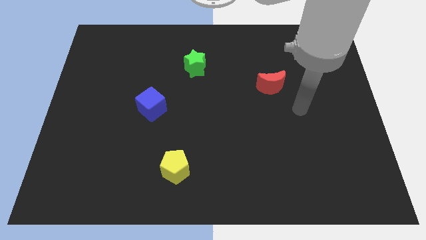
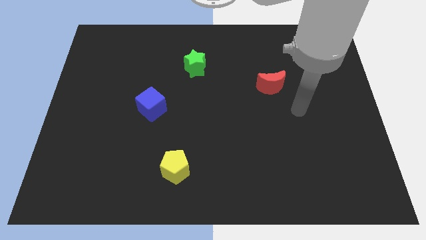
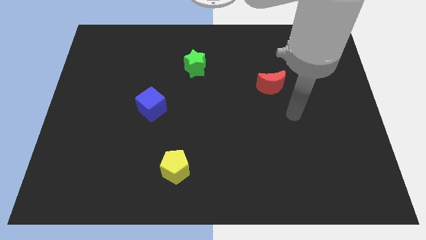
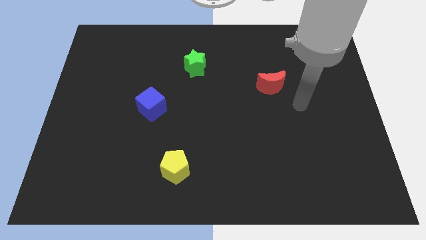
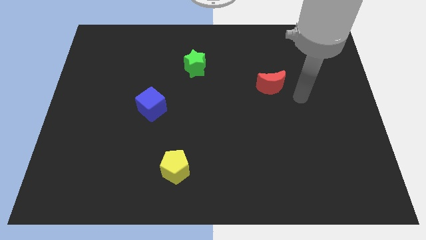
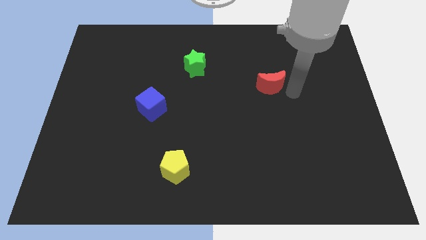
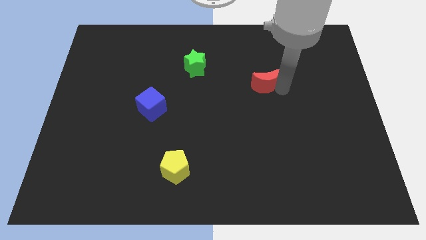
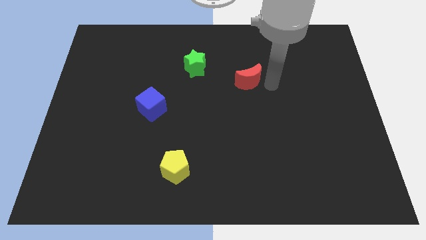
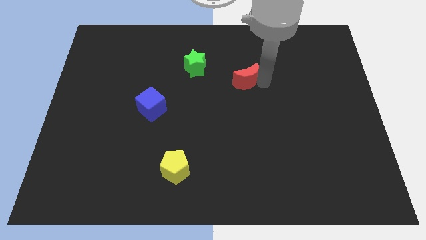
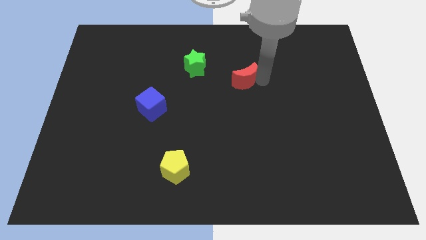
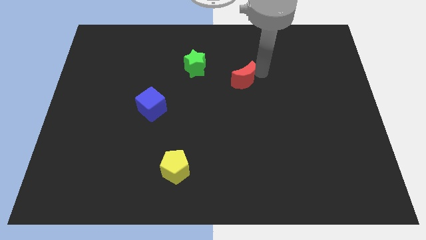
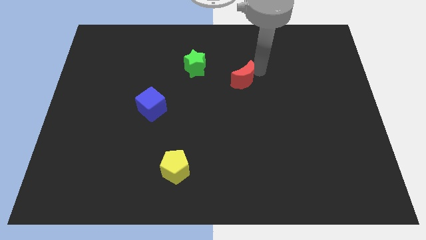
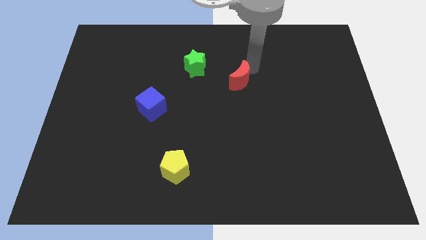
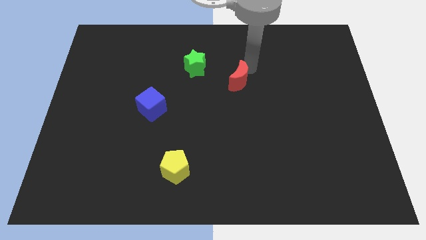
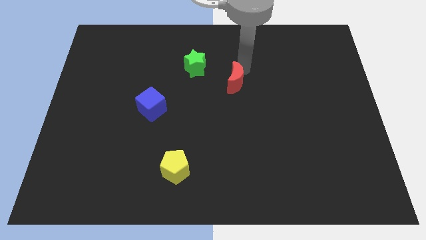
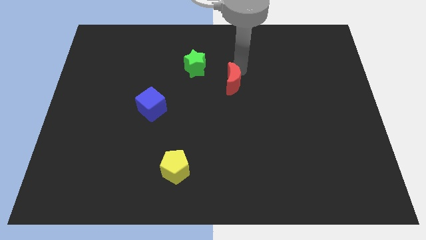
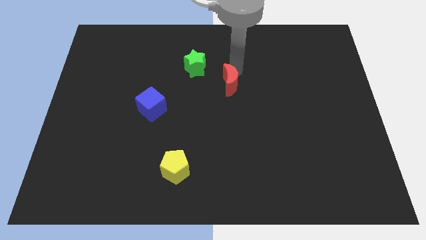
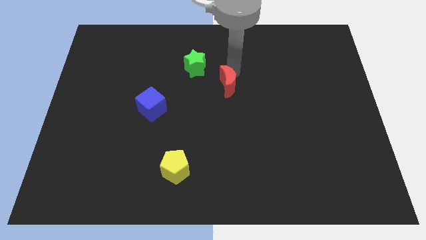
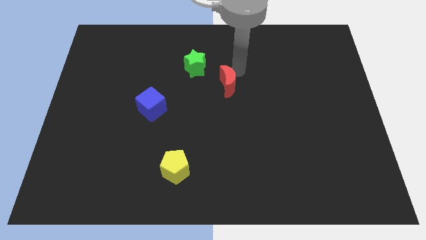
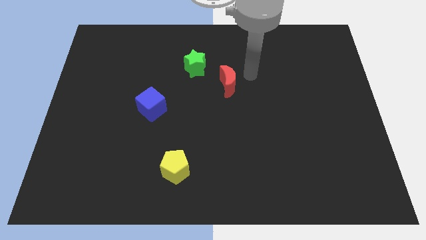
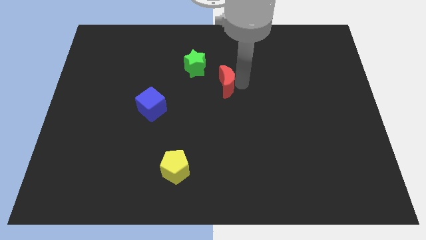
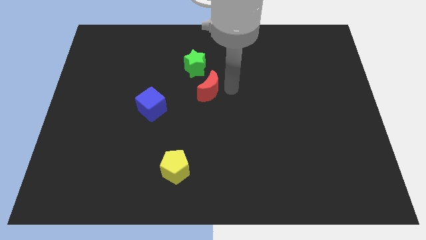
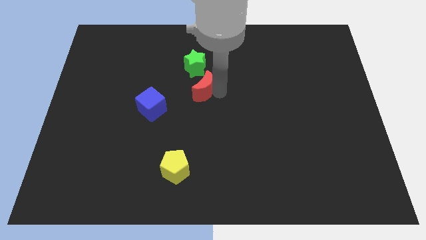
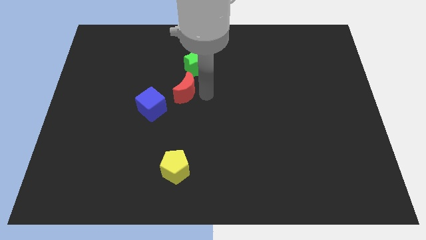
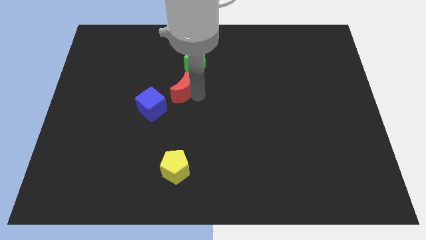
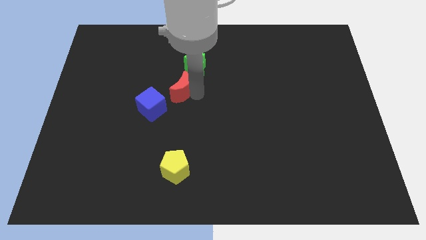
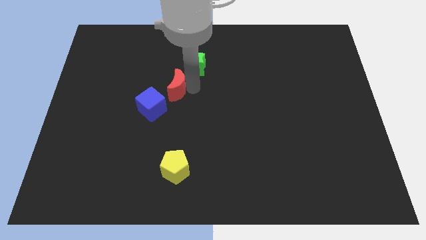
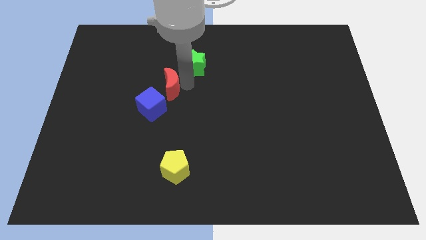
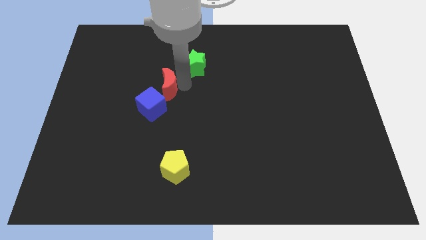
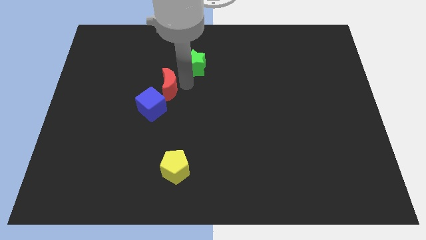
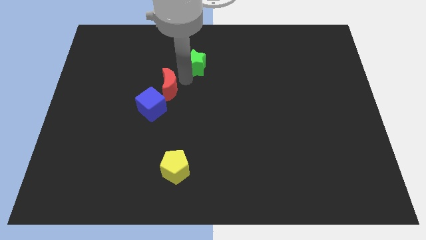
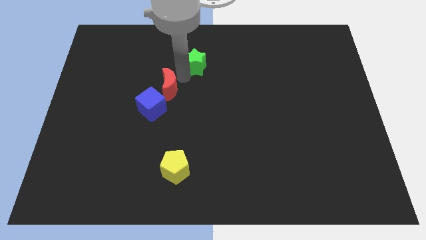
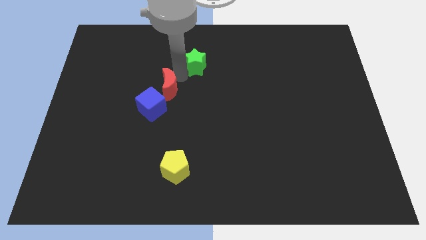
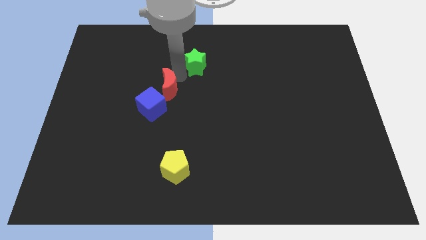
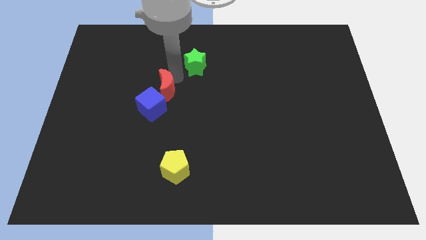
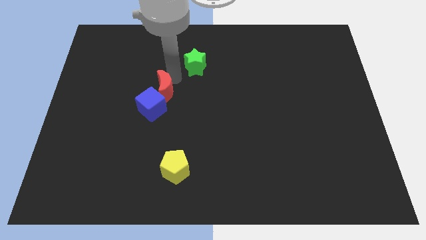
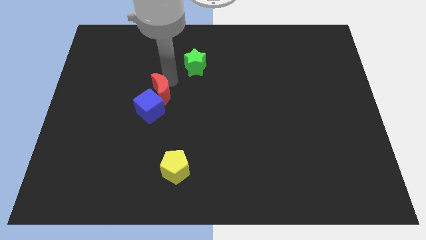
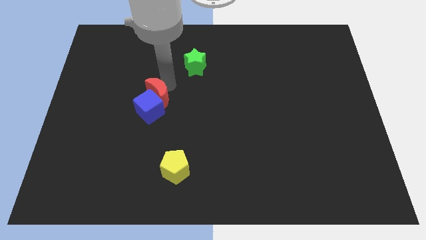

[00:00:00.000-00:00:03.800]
slide the red moon towards the cube

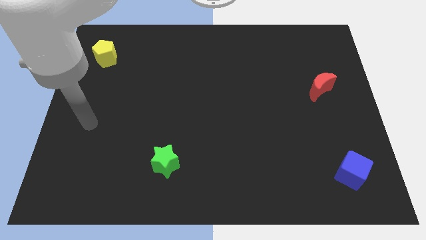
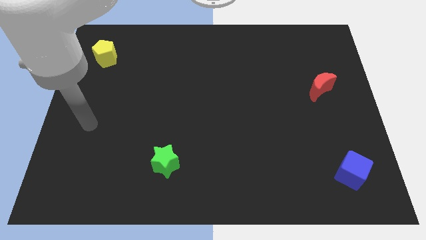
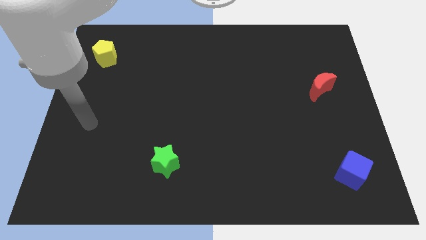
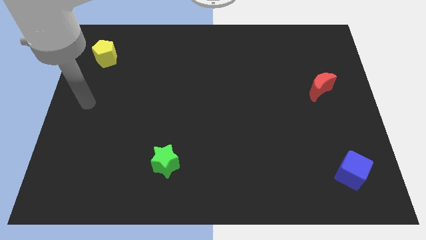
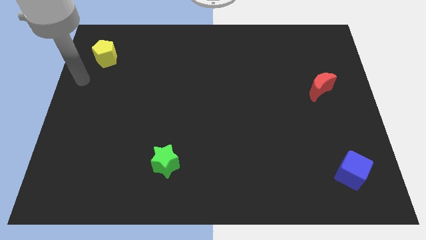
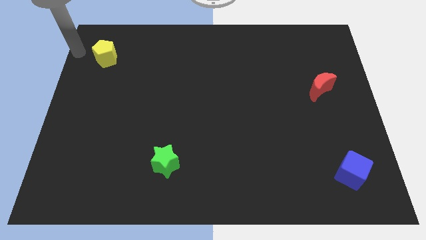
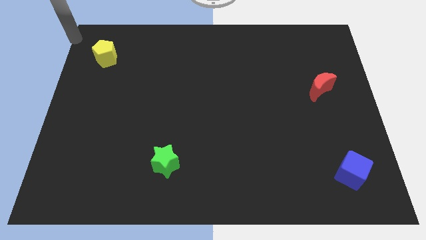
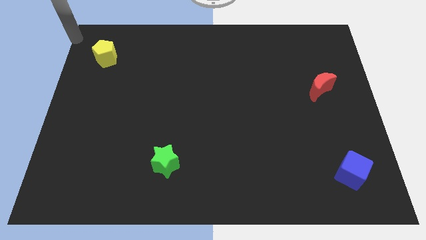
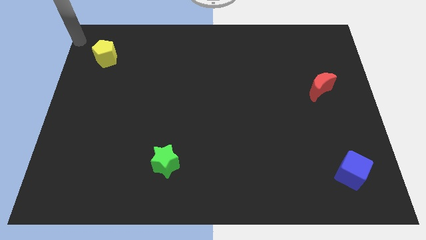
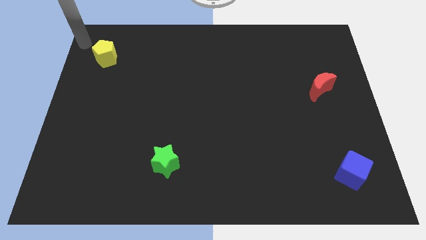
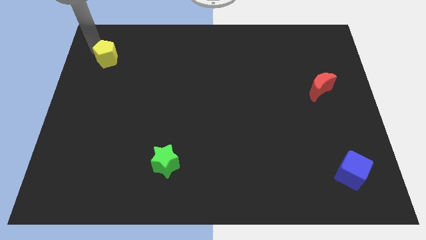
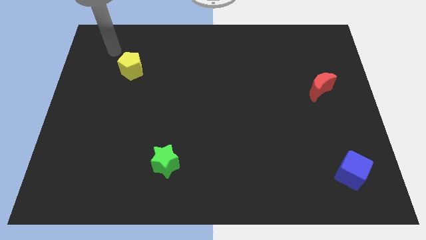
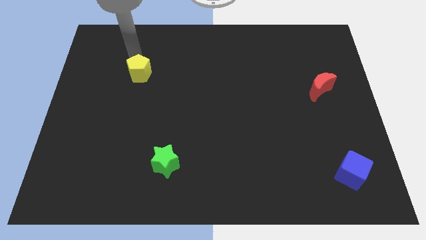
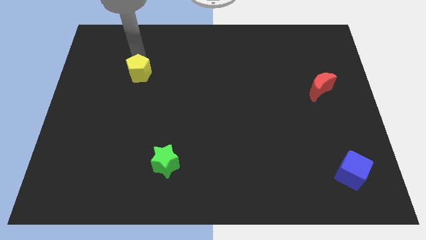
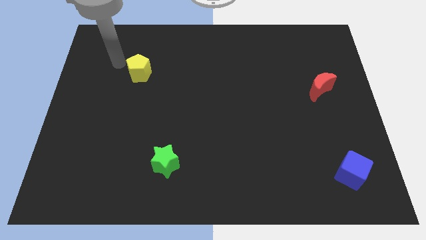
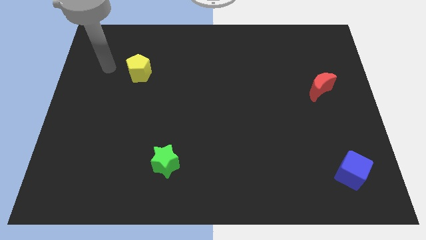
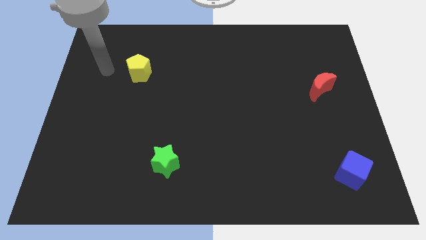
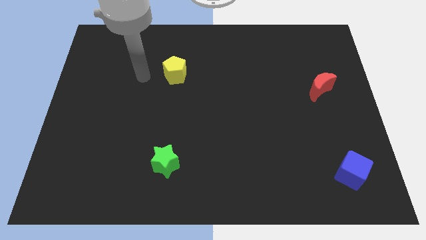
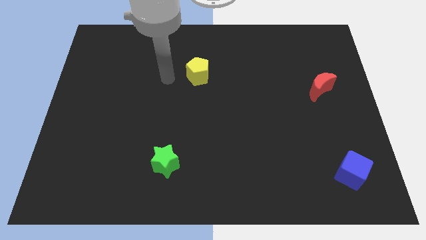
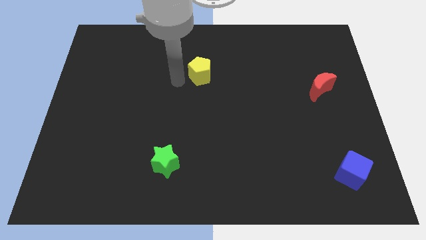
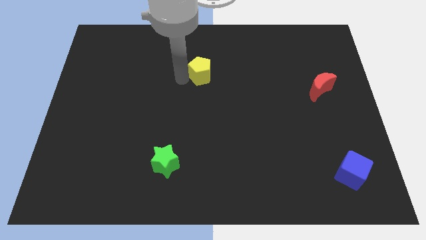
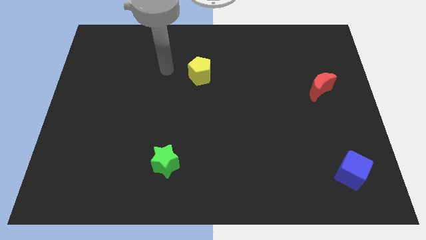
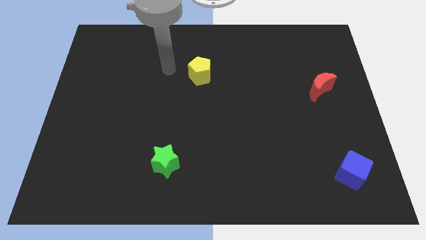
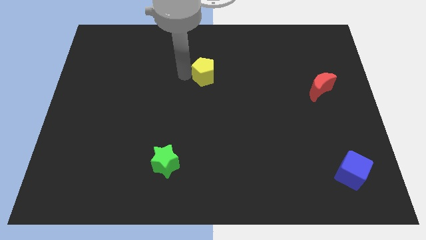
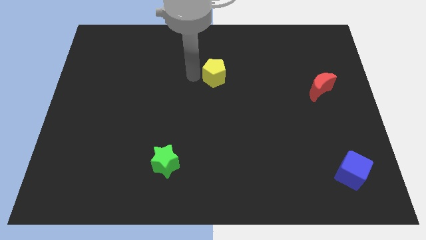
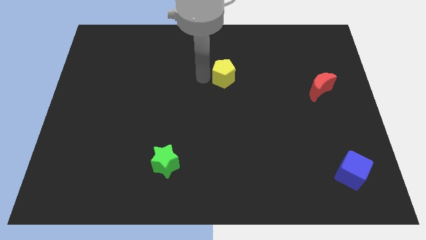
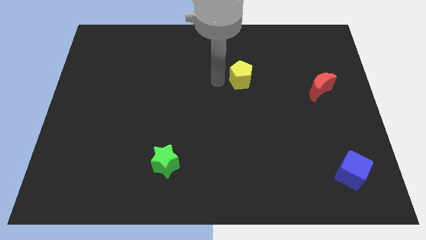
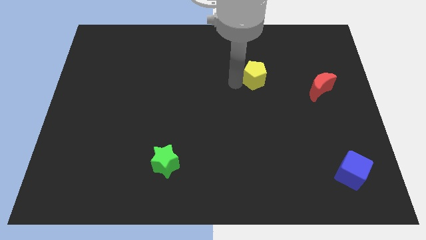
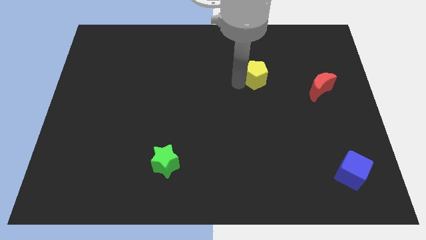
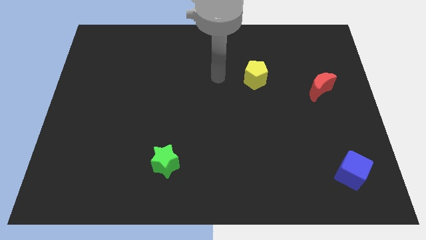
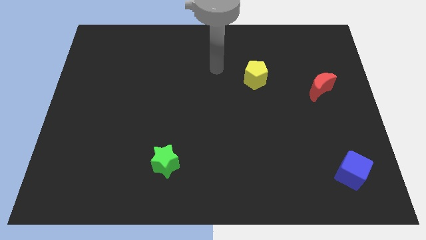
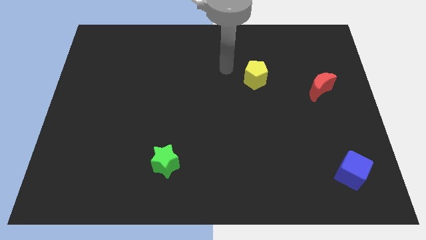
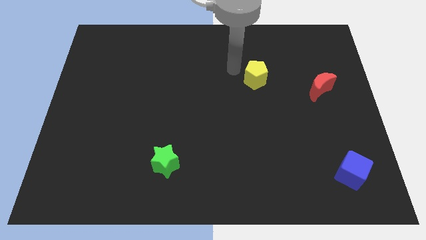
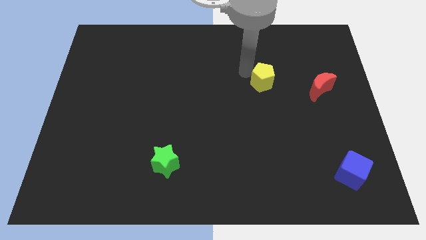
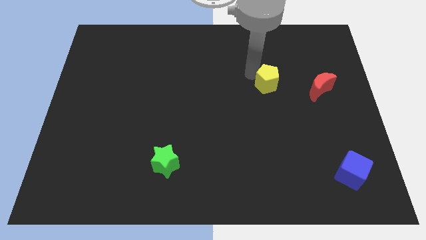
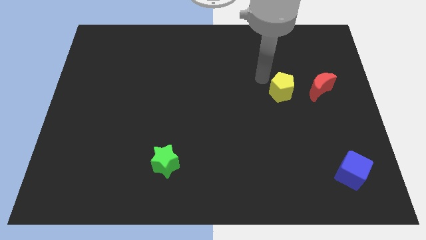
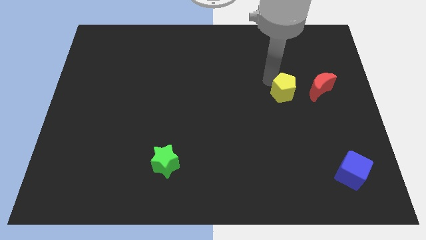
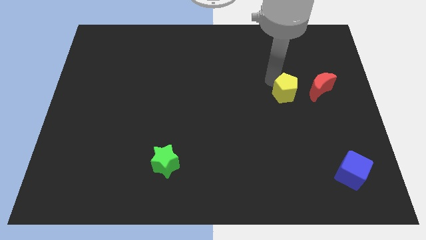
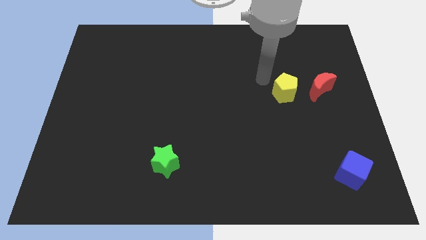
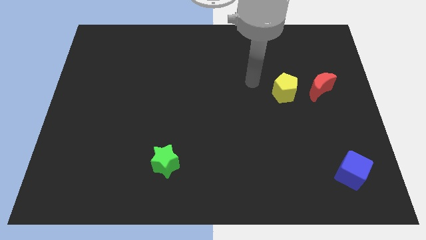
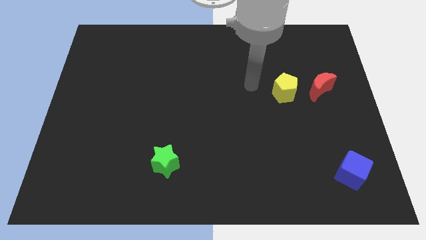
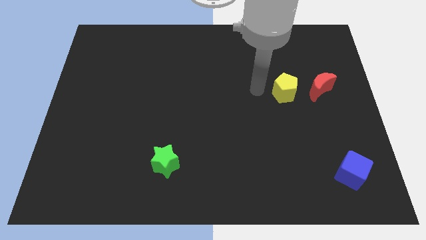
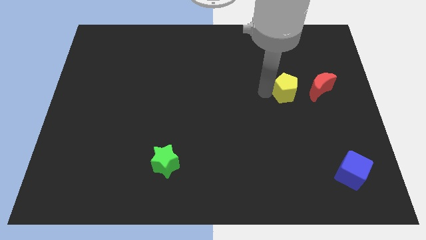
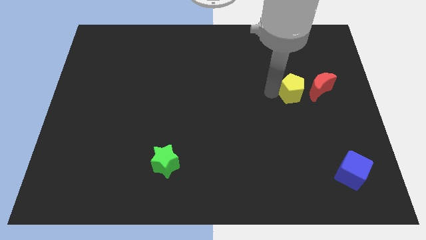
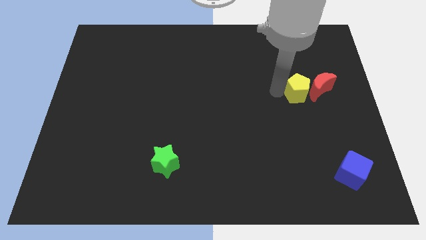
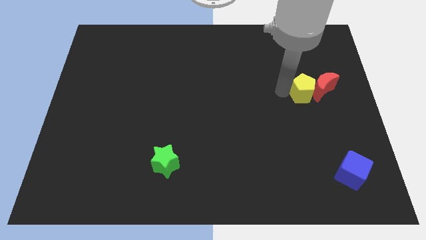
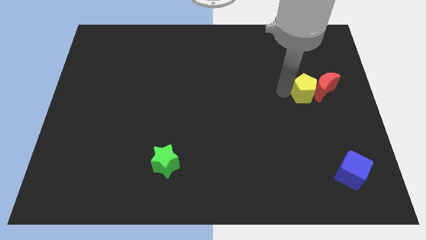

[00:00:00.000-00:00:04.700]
move the pentagon to the red moon

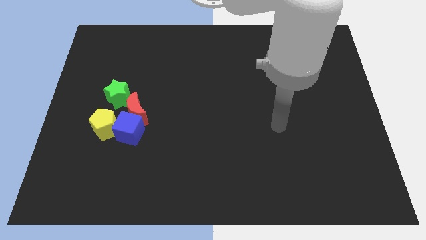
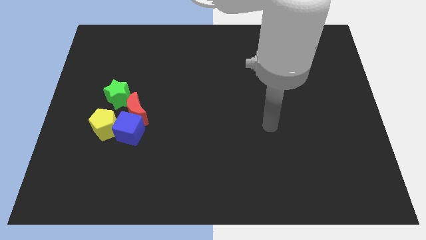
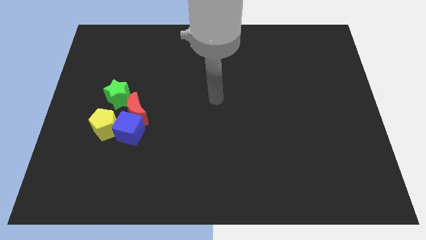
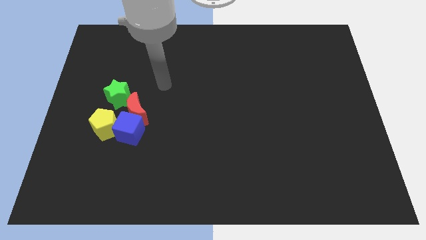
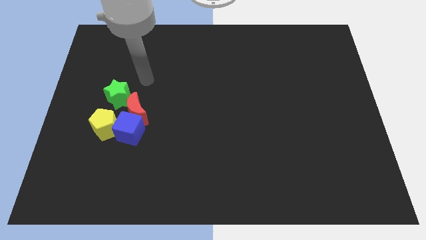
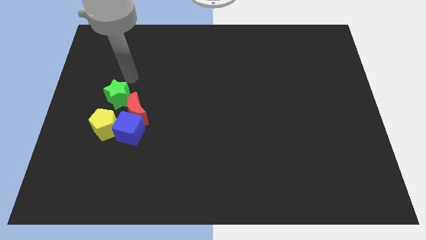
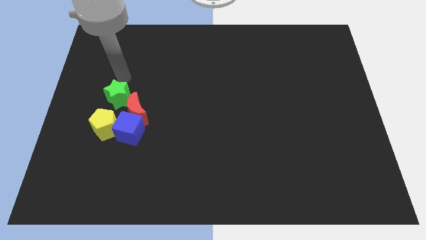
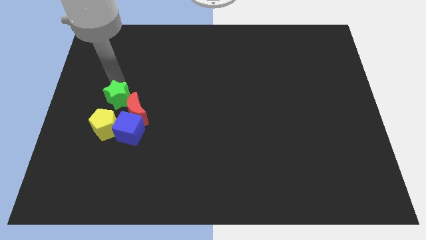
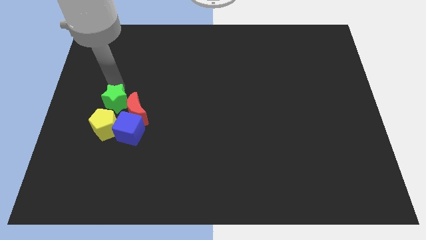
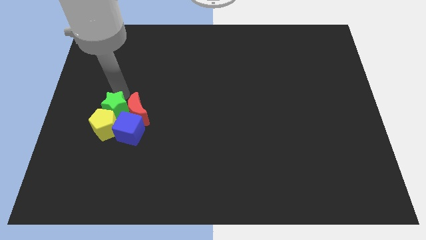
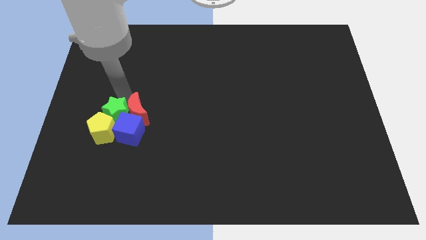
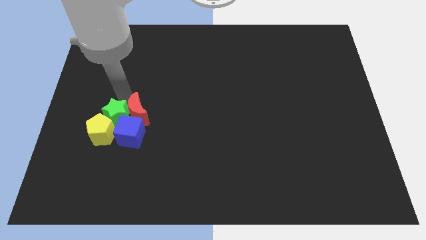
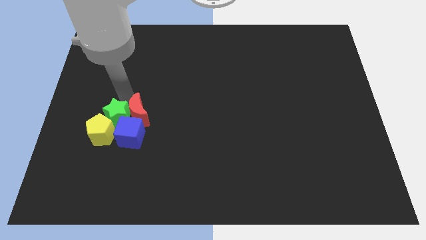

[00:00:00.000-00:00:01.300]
slide the star to the blue cube
